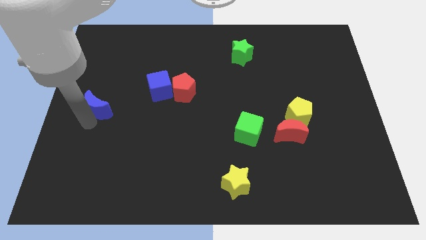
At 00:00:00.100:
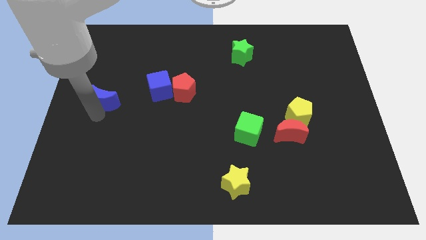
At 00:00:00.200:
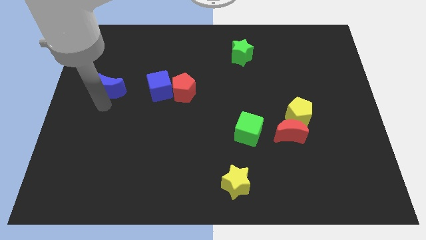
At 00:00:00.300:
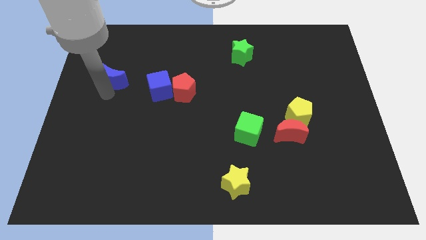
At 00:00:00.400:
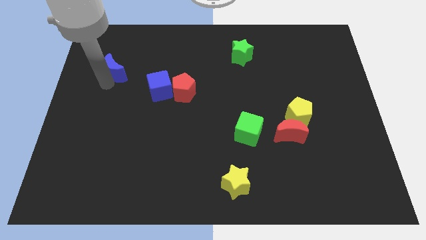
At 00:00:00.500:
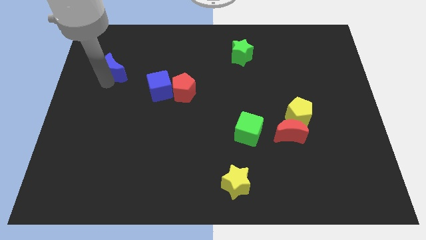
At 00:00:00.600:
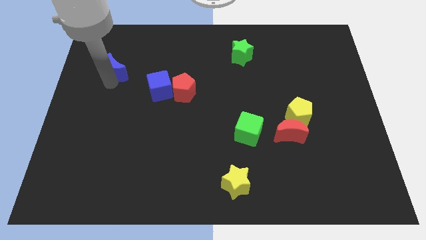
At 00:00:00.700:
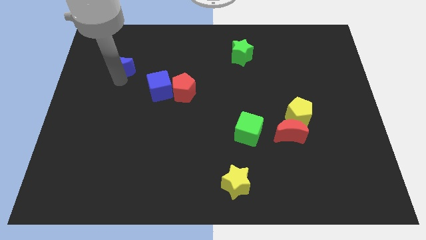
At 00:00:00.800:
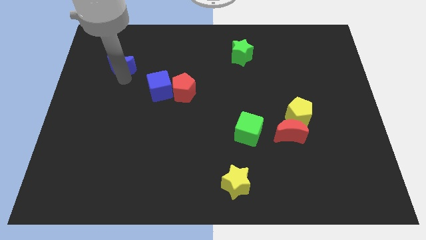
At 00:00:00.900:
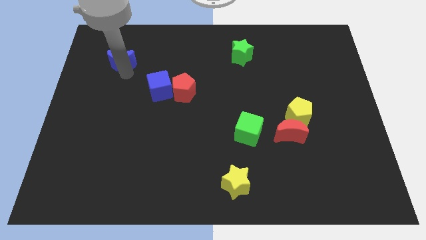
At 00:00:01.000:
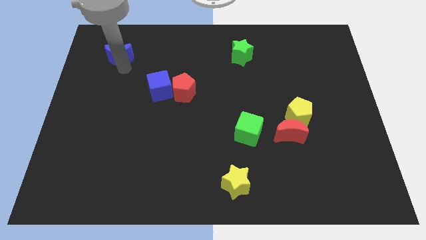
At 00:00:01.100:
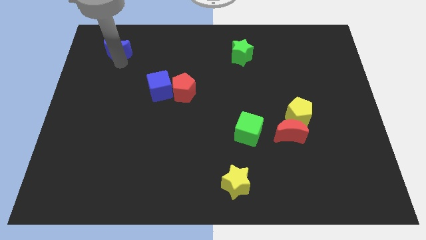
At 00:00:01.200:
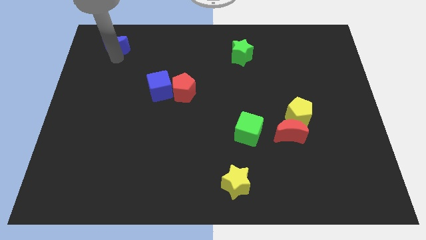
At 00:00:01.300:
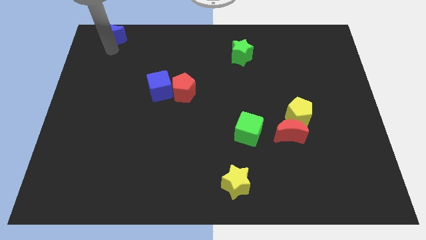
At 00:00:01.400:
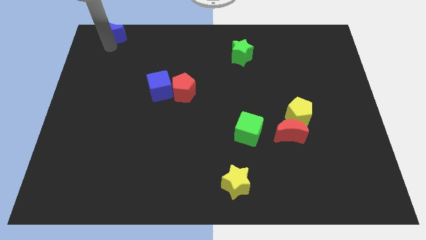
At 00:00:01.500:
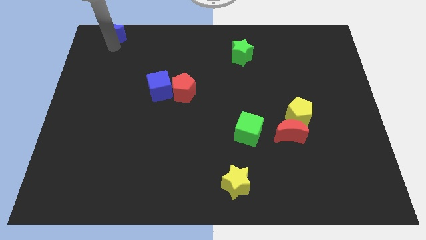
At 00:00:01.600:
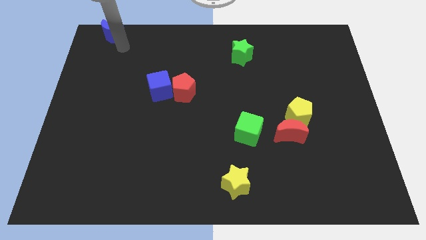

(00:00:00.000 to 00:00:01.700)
push blue moon to the top left of the board

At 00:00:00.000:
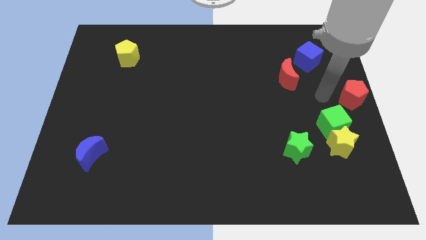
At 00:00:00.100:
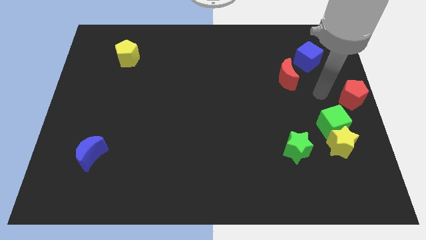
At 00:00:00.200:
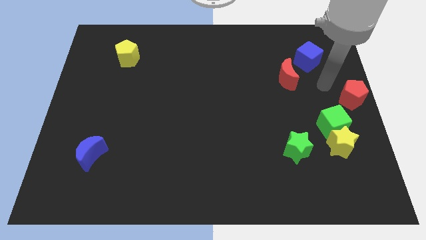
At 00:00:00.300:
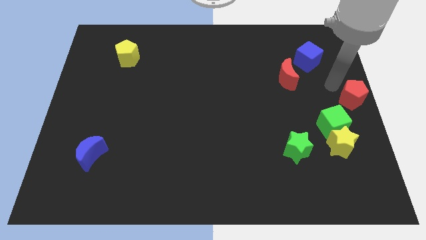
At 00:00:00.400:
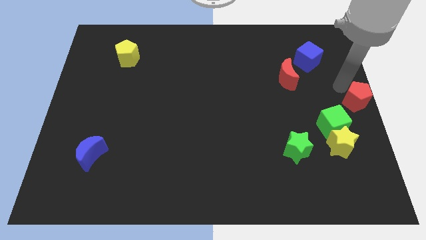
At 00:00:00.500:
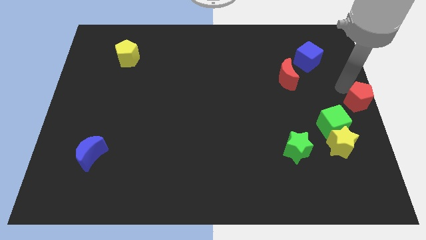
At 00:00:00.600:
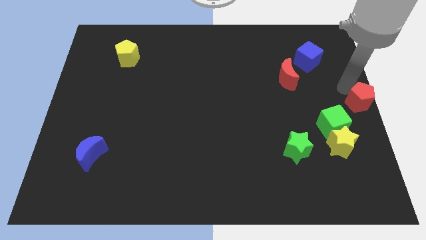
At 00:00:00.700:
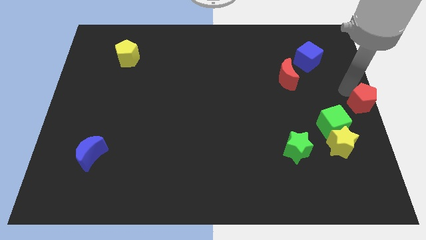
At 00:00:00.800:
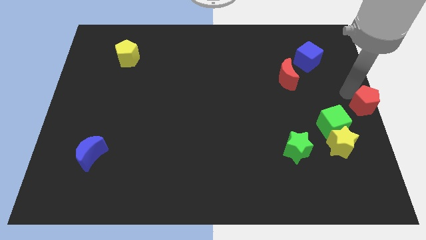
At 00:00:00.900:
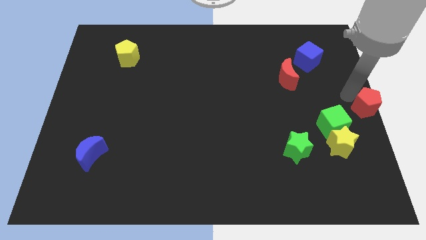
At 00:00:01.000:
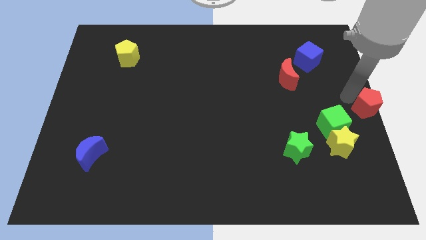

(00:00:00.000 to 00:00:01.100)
put the red pentagon diagonally right to the green cube

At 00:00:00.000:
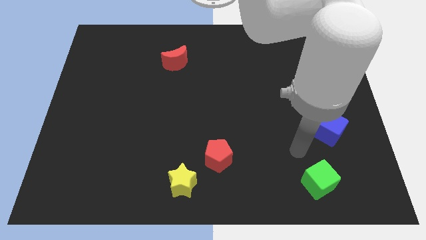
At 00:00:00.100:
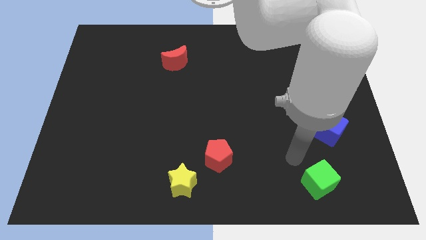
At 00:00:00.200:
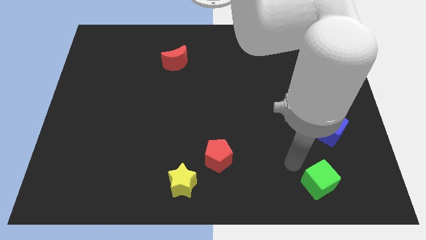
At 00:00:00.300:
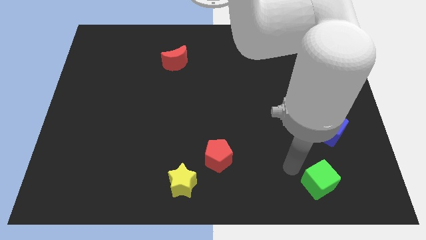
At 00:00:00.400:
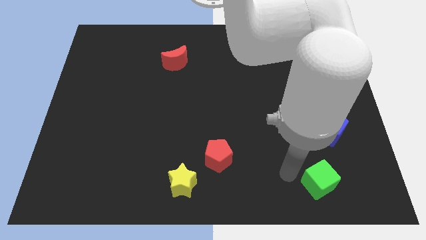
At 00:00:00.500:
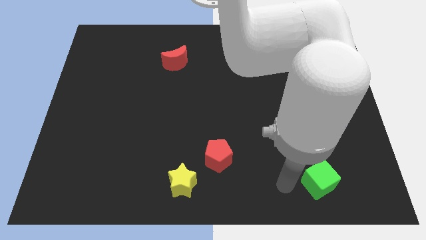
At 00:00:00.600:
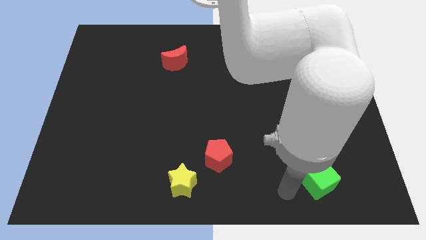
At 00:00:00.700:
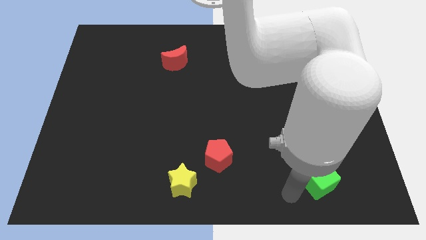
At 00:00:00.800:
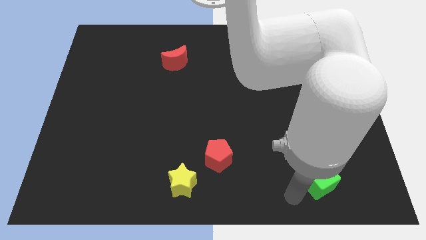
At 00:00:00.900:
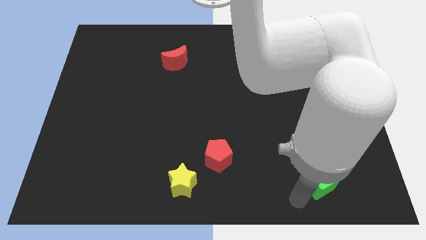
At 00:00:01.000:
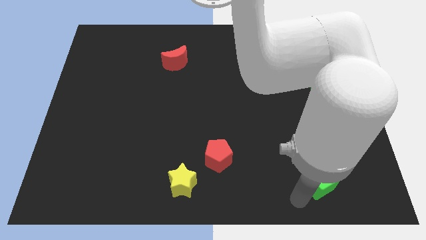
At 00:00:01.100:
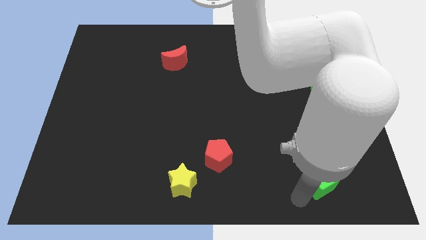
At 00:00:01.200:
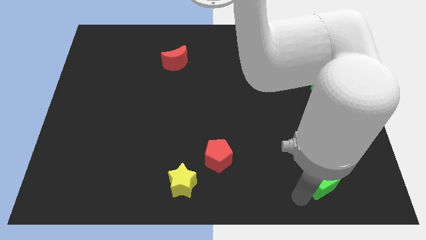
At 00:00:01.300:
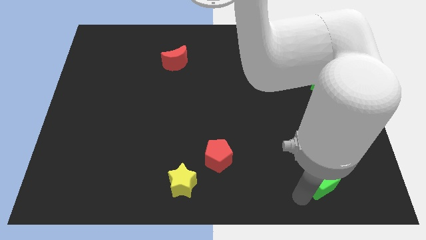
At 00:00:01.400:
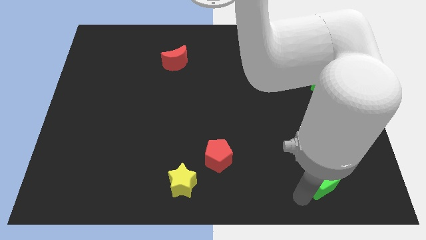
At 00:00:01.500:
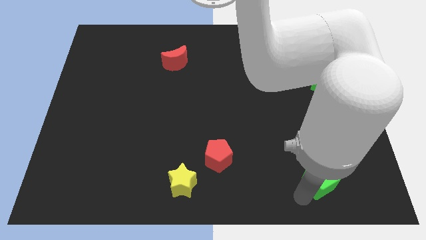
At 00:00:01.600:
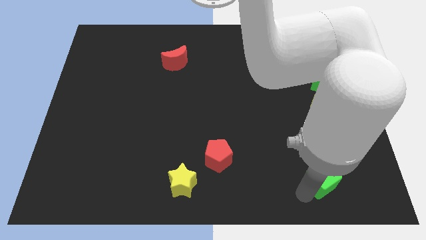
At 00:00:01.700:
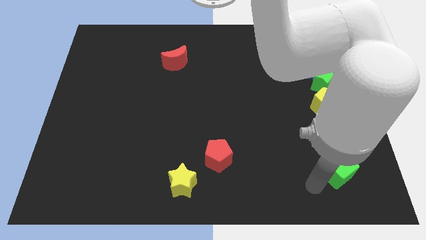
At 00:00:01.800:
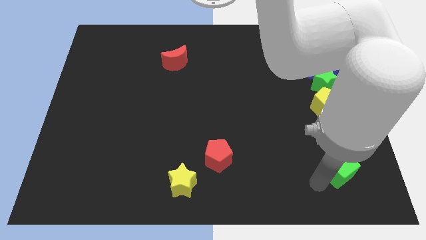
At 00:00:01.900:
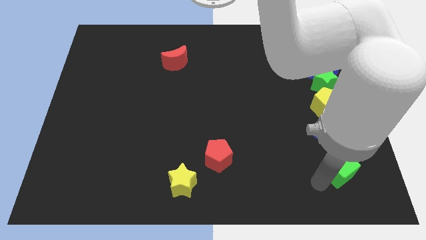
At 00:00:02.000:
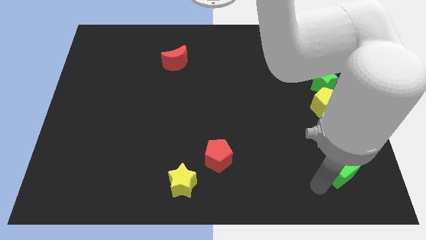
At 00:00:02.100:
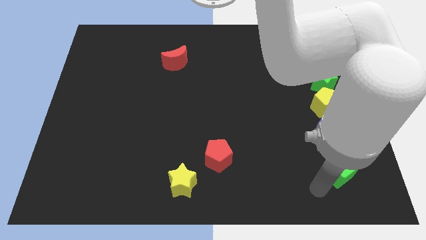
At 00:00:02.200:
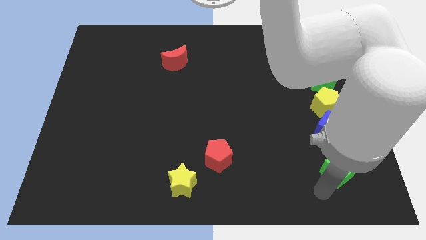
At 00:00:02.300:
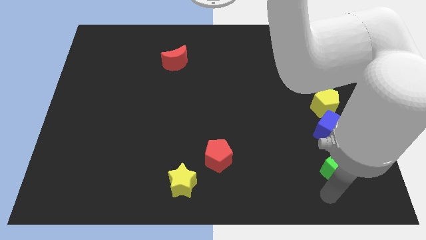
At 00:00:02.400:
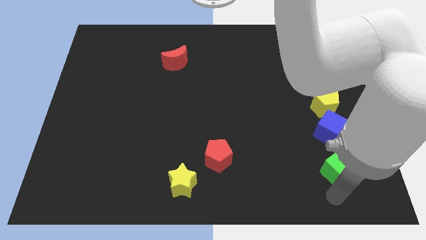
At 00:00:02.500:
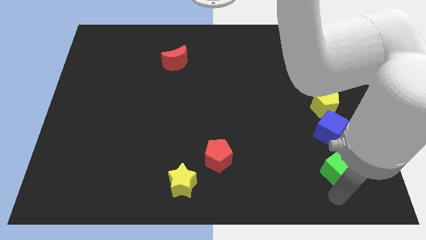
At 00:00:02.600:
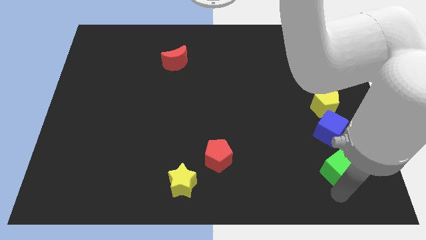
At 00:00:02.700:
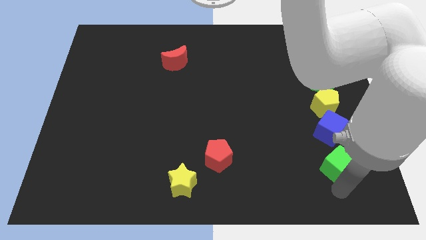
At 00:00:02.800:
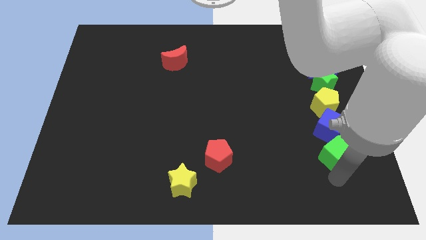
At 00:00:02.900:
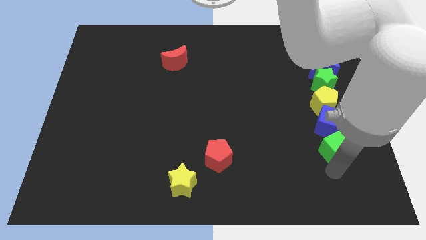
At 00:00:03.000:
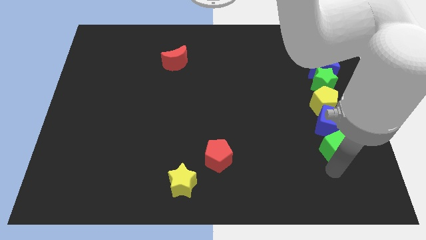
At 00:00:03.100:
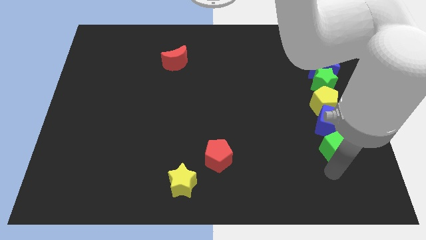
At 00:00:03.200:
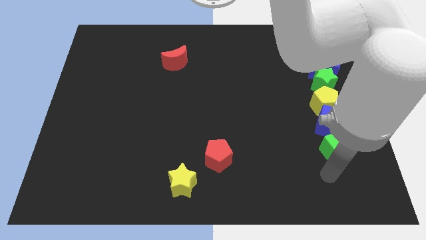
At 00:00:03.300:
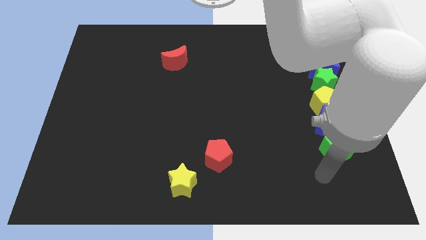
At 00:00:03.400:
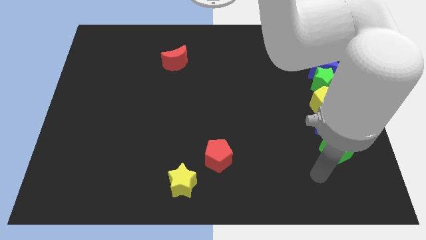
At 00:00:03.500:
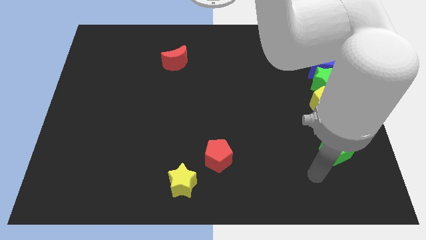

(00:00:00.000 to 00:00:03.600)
place the green cube below the blue cube

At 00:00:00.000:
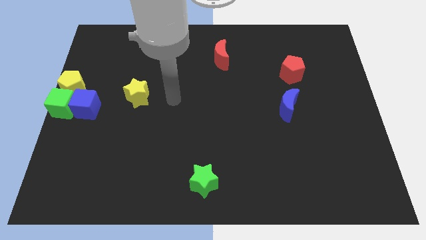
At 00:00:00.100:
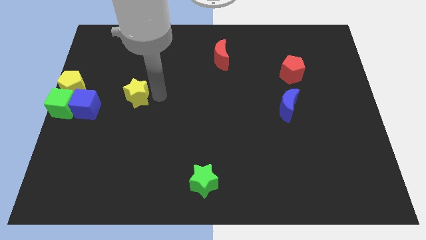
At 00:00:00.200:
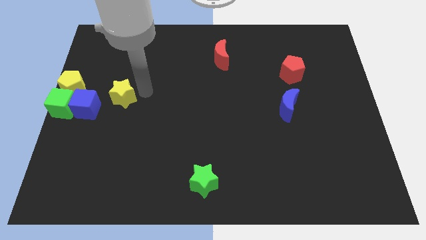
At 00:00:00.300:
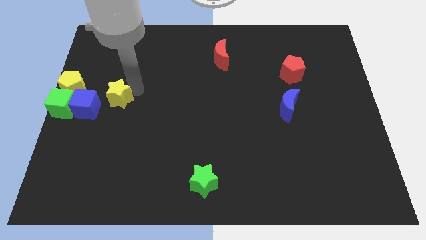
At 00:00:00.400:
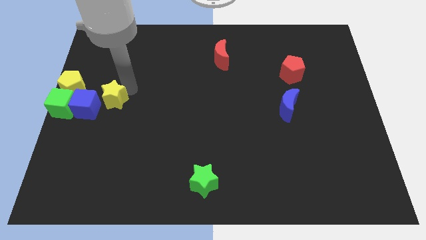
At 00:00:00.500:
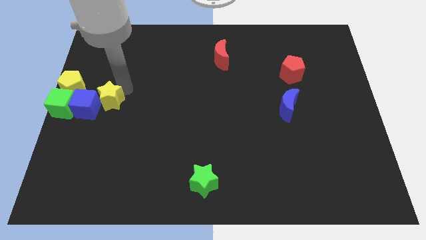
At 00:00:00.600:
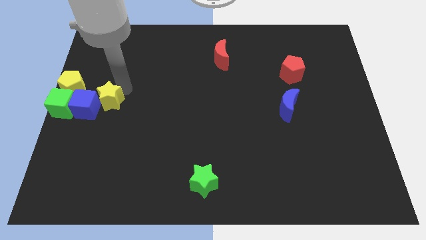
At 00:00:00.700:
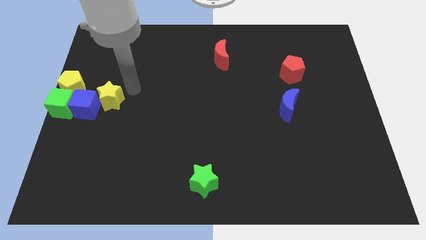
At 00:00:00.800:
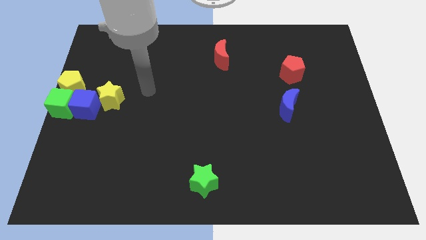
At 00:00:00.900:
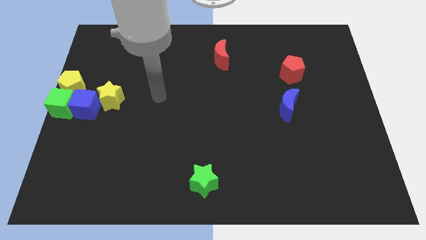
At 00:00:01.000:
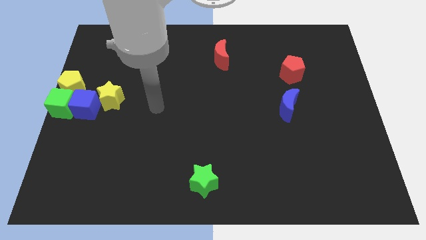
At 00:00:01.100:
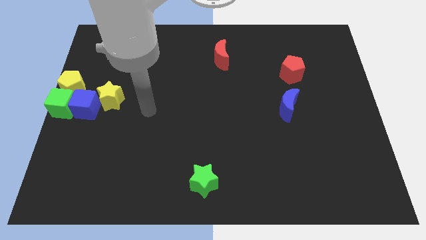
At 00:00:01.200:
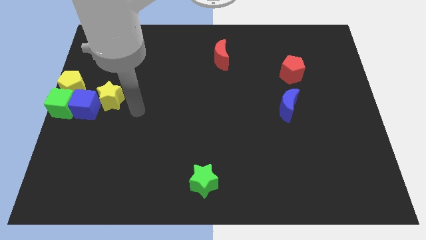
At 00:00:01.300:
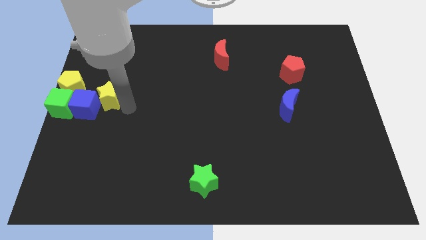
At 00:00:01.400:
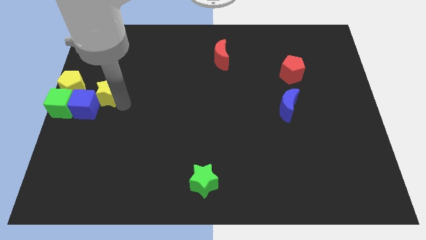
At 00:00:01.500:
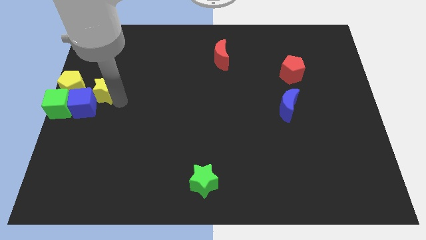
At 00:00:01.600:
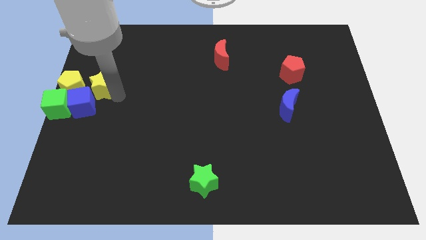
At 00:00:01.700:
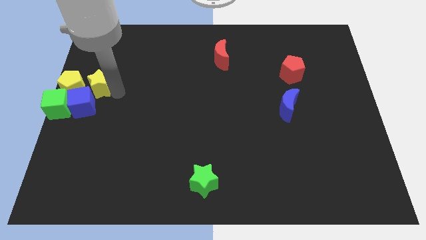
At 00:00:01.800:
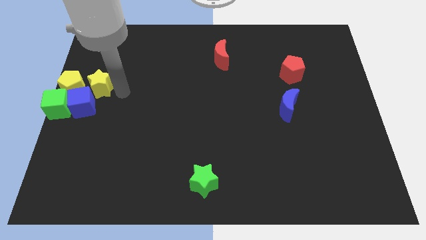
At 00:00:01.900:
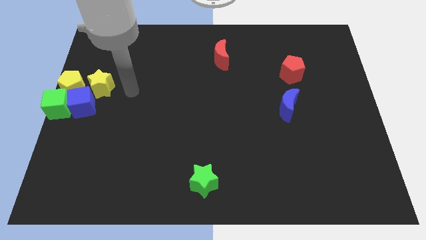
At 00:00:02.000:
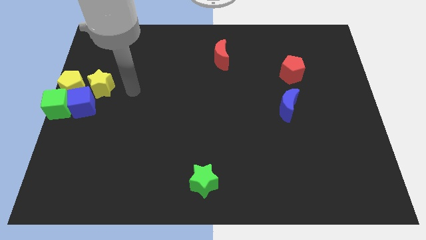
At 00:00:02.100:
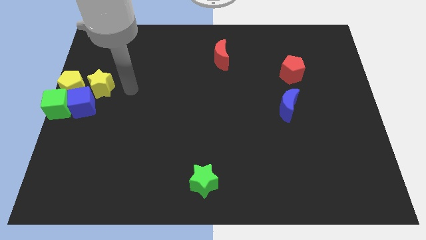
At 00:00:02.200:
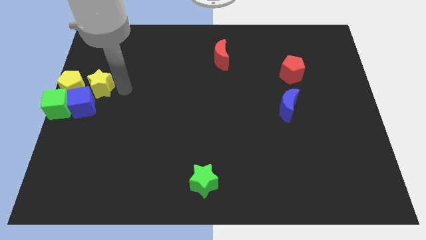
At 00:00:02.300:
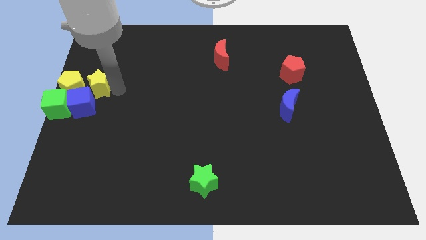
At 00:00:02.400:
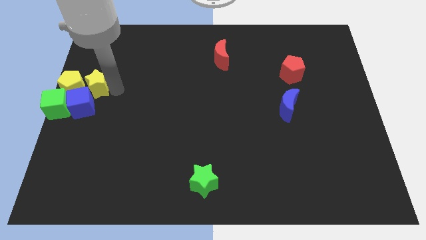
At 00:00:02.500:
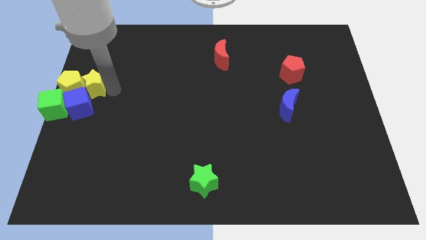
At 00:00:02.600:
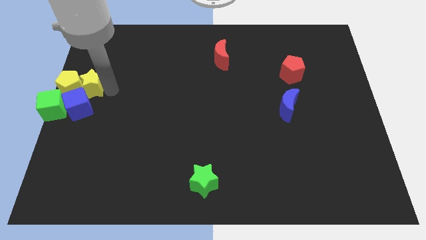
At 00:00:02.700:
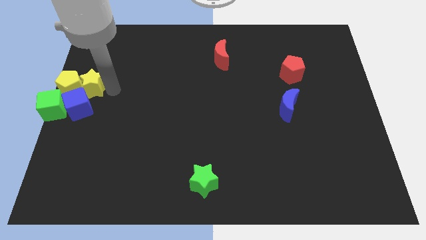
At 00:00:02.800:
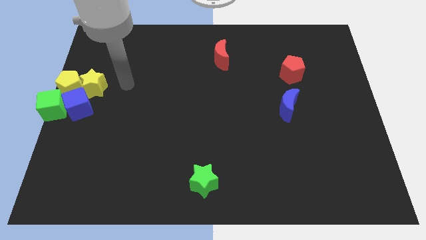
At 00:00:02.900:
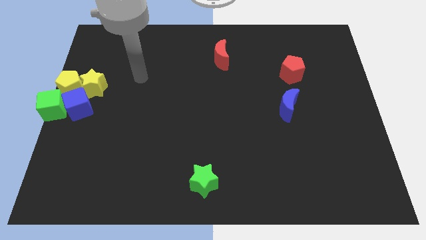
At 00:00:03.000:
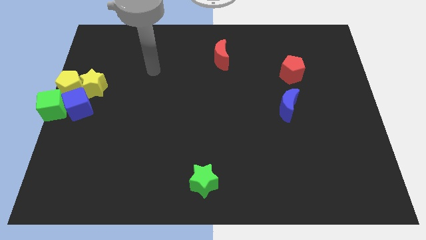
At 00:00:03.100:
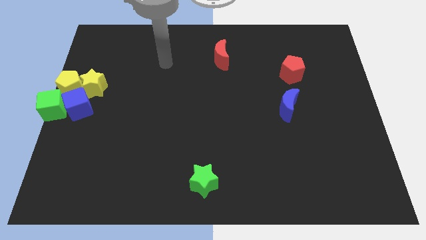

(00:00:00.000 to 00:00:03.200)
place the yellow star right to the yellow pentagon
